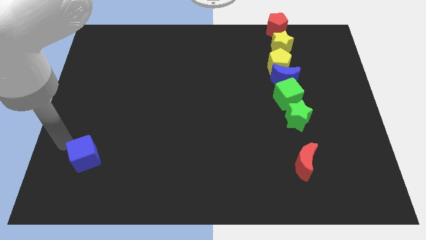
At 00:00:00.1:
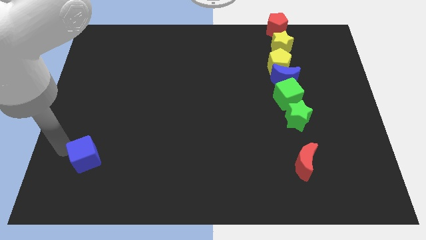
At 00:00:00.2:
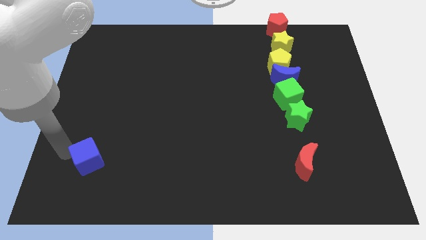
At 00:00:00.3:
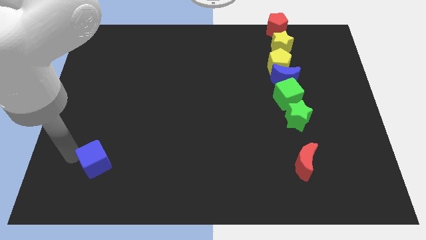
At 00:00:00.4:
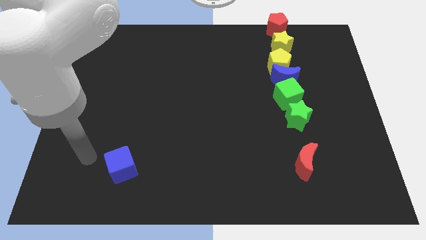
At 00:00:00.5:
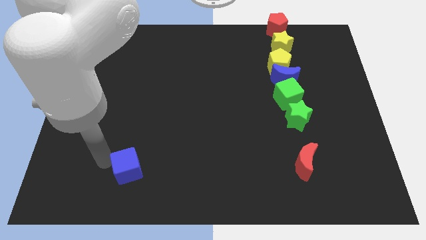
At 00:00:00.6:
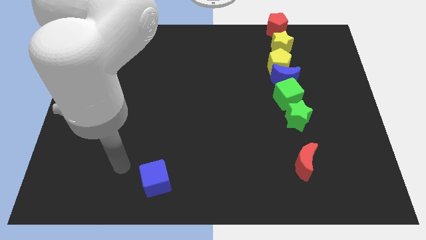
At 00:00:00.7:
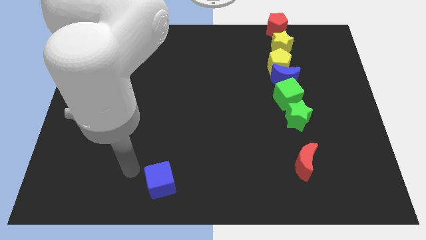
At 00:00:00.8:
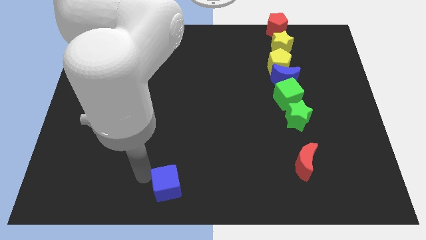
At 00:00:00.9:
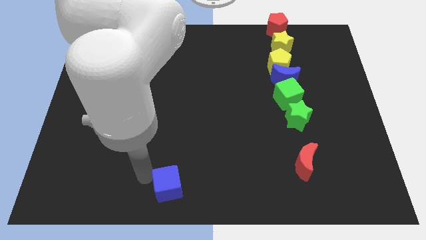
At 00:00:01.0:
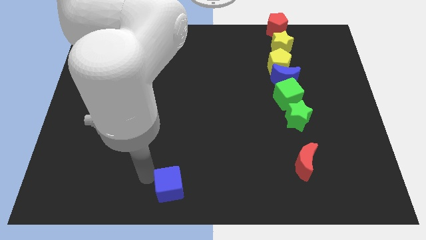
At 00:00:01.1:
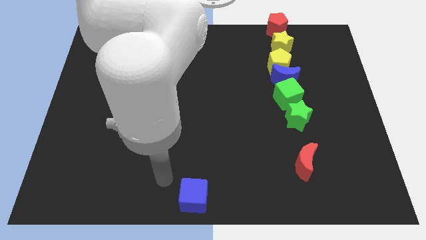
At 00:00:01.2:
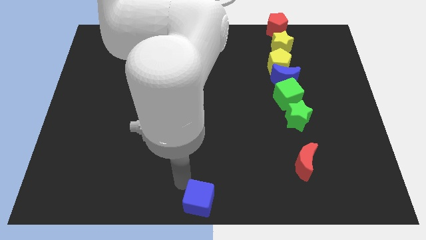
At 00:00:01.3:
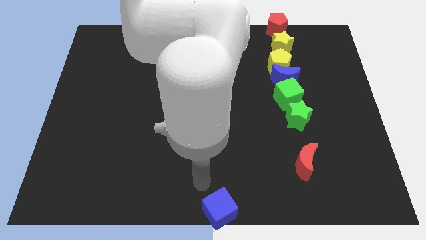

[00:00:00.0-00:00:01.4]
move the blue cube to the bottom center of the board

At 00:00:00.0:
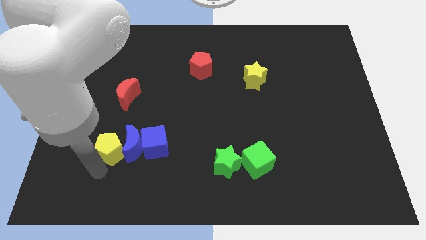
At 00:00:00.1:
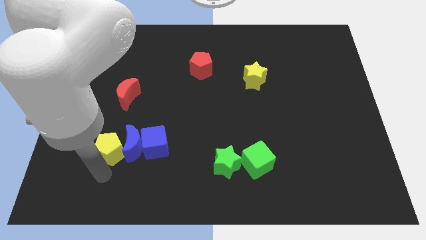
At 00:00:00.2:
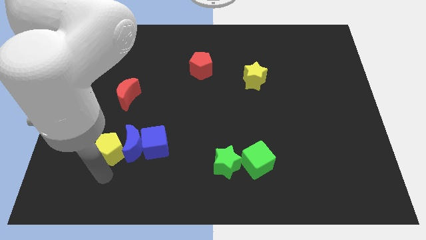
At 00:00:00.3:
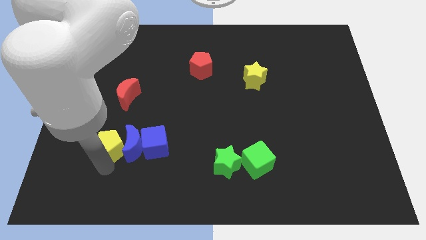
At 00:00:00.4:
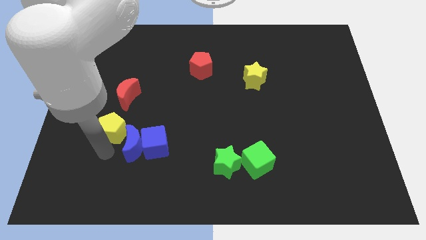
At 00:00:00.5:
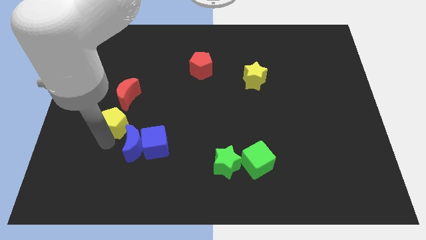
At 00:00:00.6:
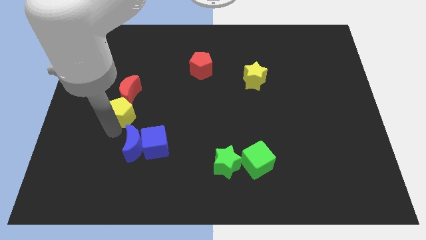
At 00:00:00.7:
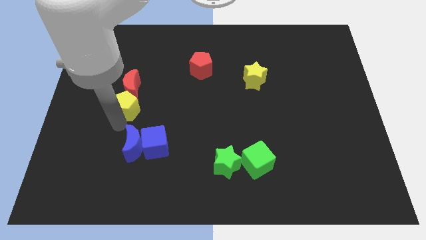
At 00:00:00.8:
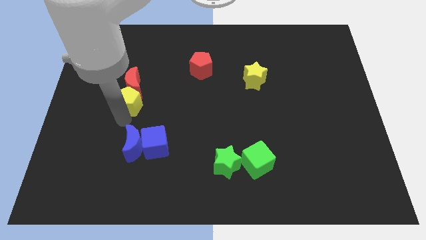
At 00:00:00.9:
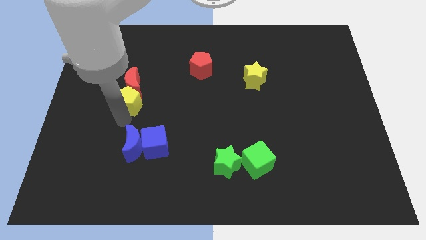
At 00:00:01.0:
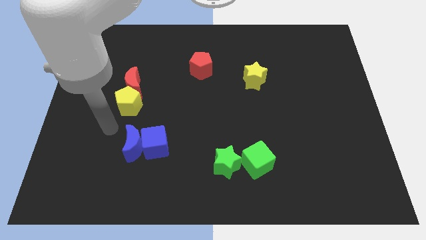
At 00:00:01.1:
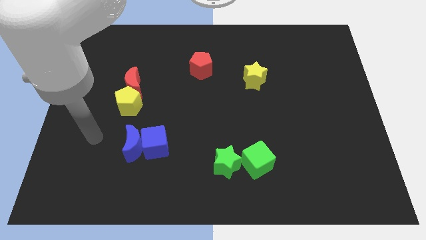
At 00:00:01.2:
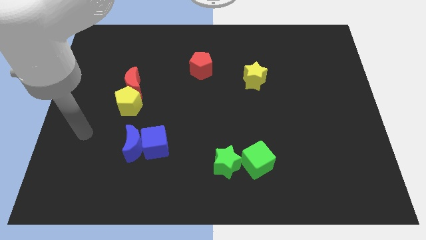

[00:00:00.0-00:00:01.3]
push the yellow pentagon to the bottom of the red crescent

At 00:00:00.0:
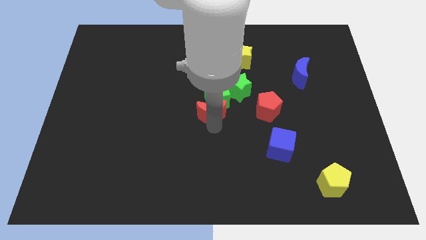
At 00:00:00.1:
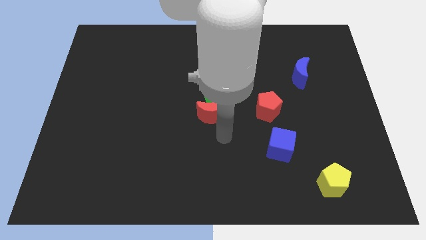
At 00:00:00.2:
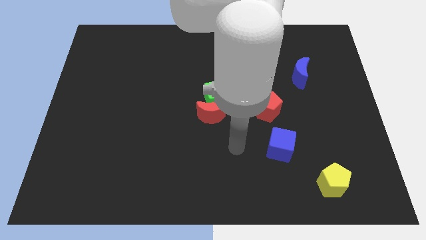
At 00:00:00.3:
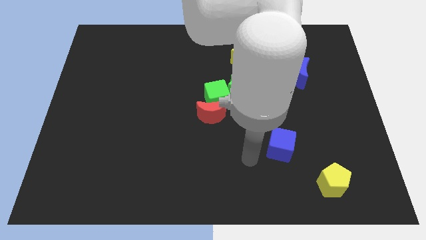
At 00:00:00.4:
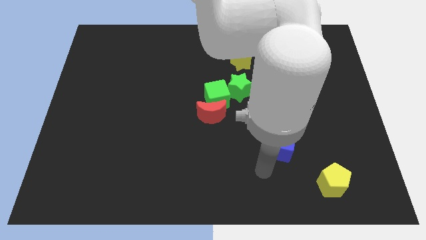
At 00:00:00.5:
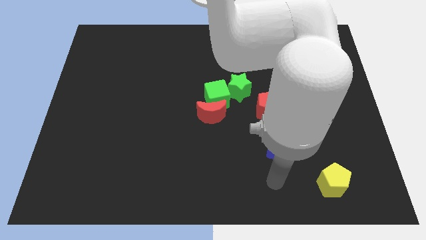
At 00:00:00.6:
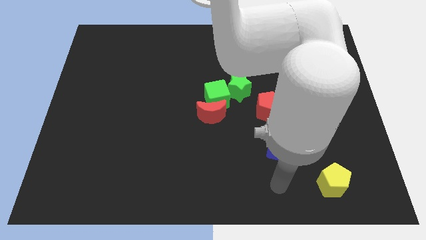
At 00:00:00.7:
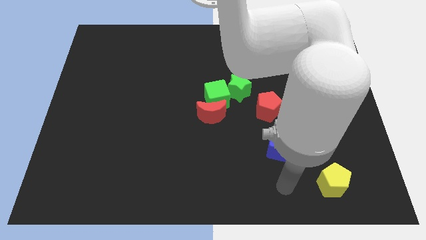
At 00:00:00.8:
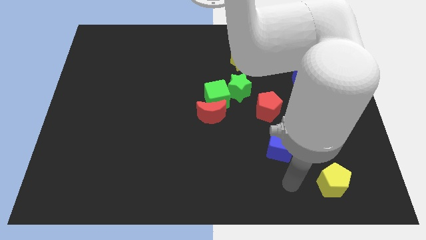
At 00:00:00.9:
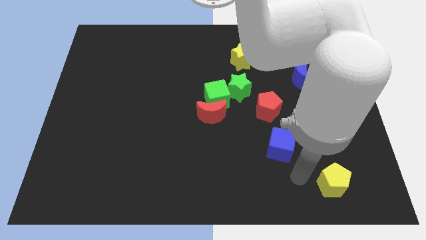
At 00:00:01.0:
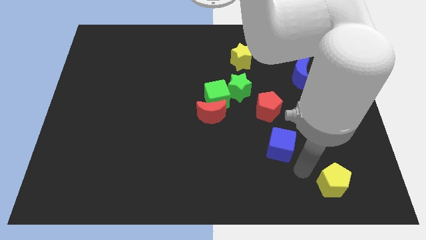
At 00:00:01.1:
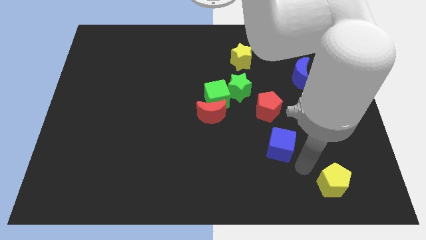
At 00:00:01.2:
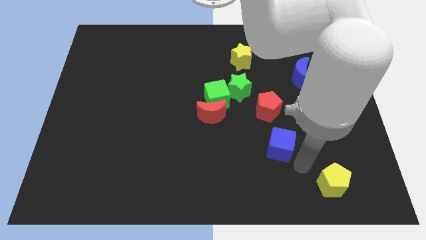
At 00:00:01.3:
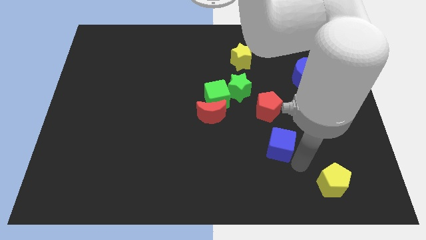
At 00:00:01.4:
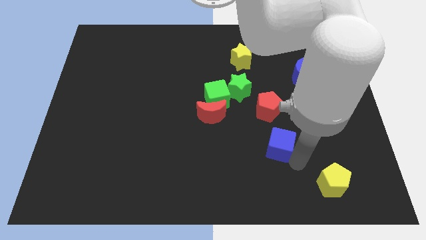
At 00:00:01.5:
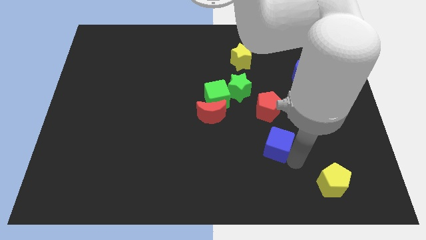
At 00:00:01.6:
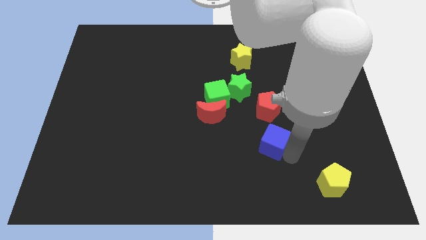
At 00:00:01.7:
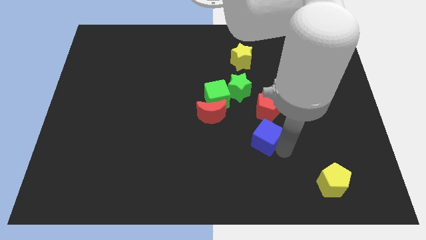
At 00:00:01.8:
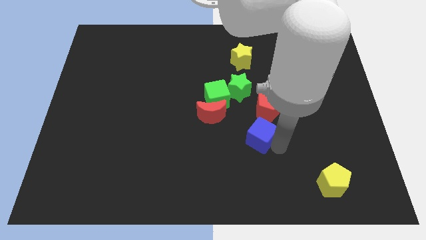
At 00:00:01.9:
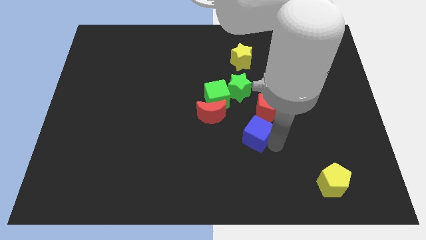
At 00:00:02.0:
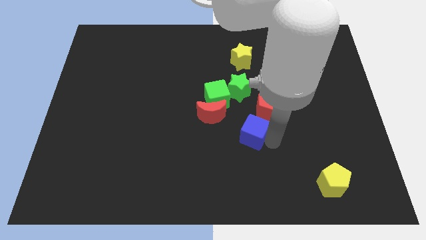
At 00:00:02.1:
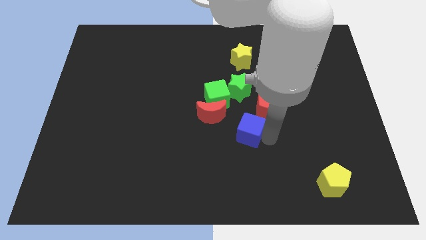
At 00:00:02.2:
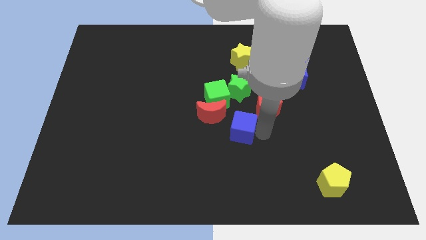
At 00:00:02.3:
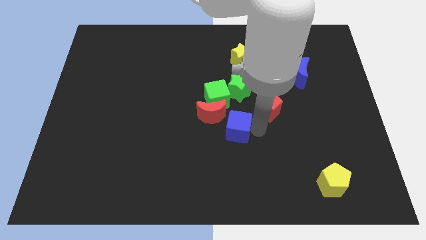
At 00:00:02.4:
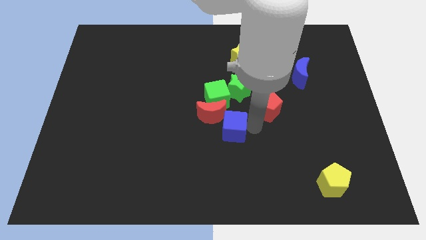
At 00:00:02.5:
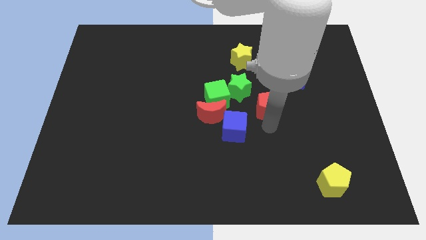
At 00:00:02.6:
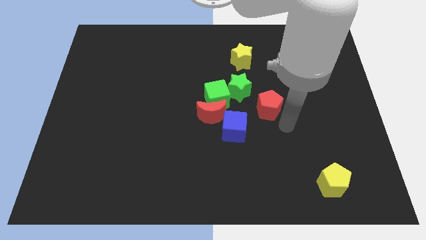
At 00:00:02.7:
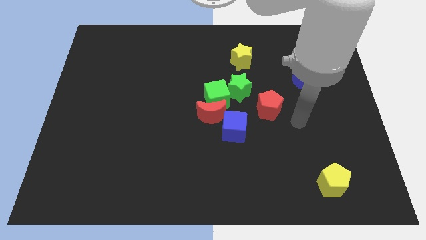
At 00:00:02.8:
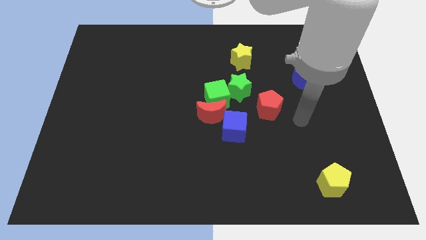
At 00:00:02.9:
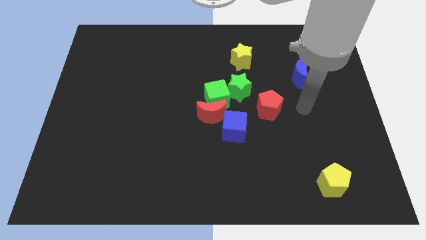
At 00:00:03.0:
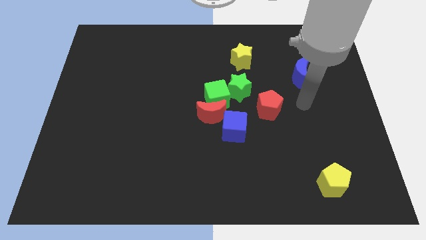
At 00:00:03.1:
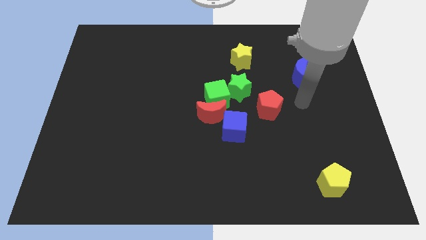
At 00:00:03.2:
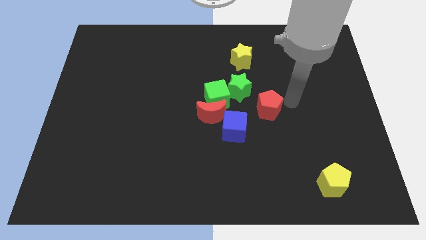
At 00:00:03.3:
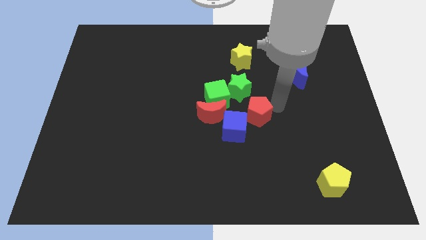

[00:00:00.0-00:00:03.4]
push the blue cube to the bottom right of the red crescent

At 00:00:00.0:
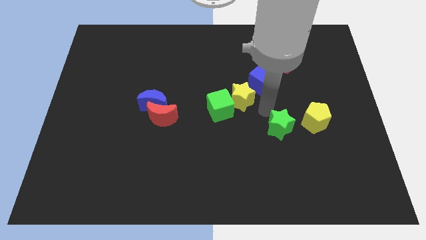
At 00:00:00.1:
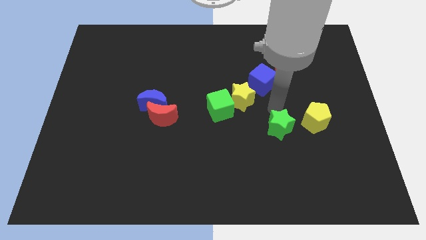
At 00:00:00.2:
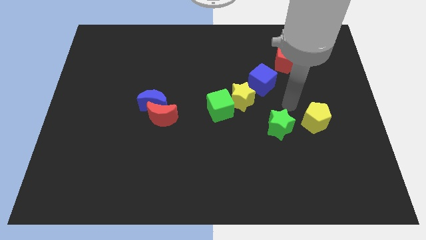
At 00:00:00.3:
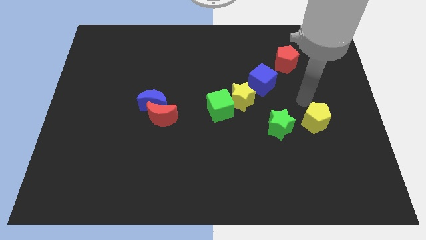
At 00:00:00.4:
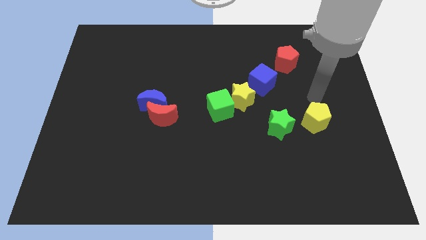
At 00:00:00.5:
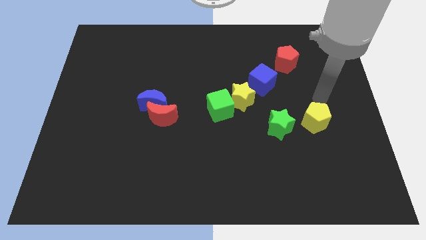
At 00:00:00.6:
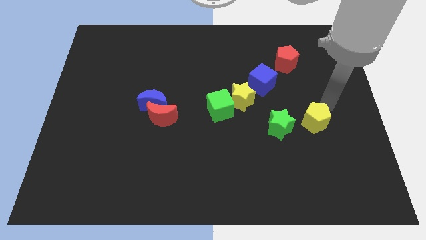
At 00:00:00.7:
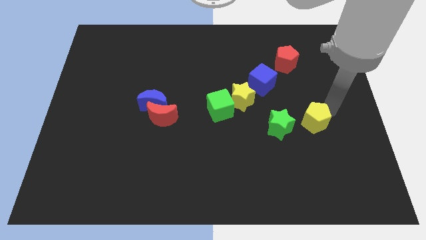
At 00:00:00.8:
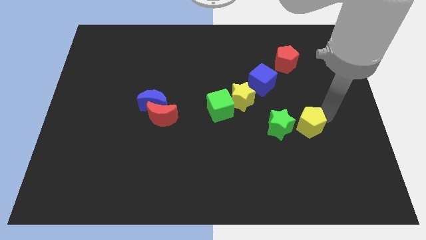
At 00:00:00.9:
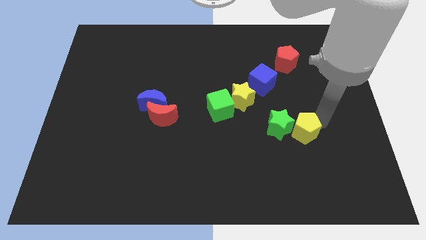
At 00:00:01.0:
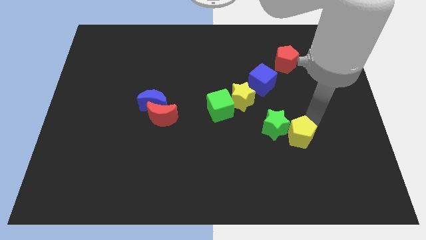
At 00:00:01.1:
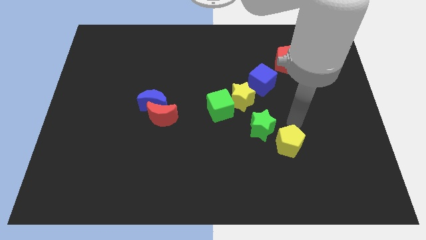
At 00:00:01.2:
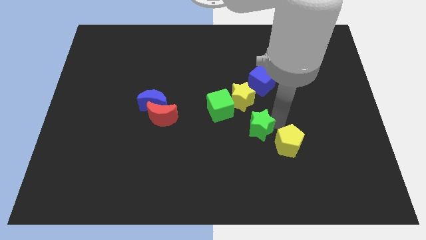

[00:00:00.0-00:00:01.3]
push the yellow pentagon to the bottom right of the green star

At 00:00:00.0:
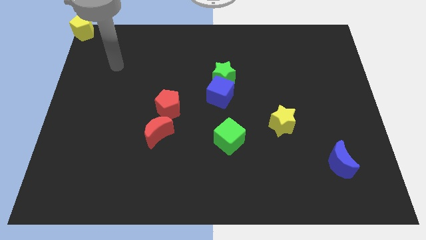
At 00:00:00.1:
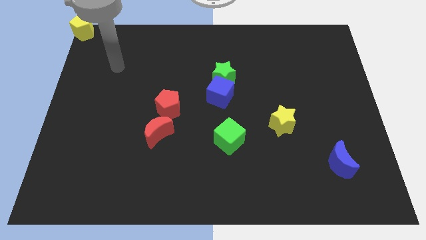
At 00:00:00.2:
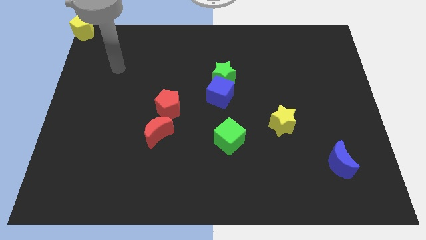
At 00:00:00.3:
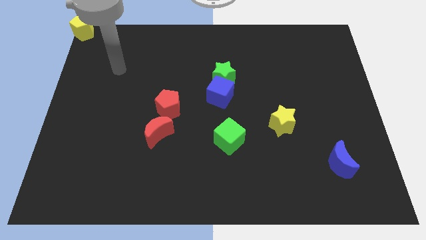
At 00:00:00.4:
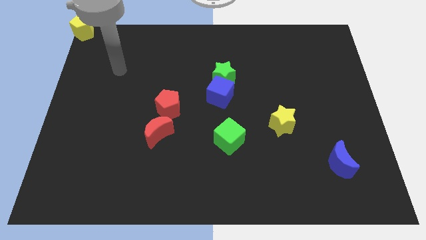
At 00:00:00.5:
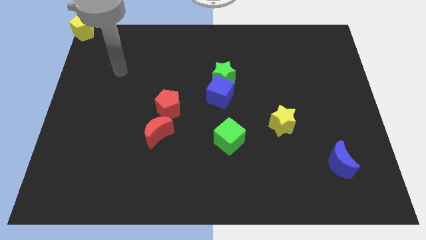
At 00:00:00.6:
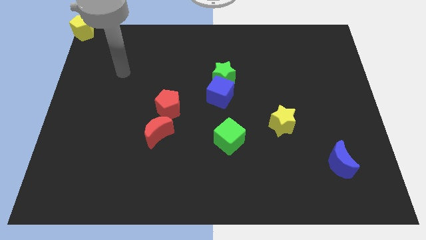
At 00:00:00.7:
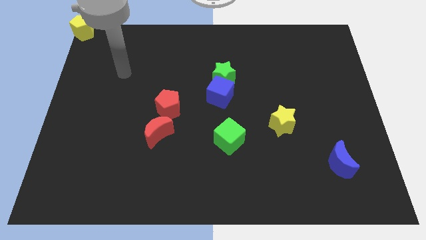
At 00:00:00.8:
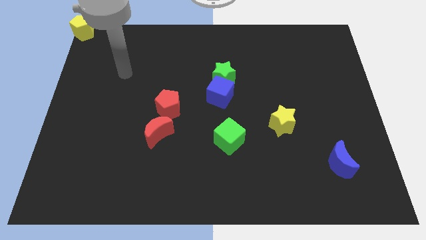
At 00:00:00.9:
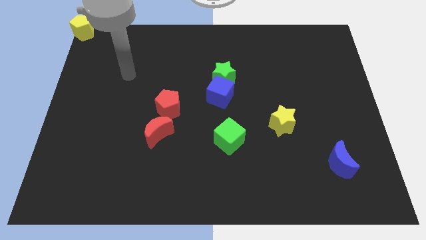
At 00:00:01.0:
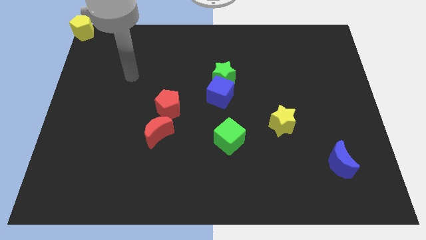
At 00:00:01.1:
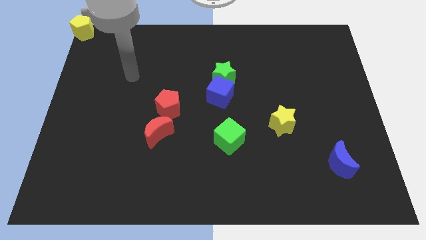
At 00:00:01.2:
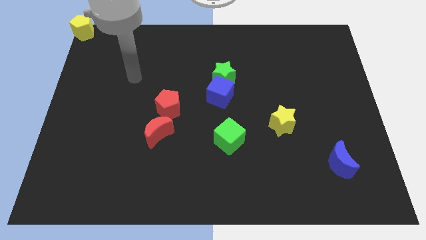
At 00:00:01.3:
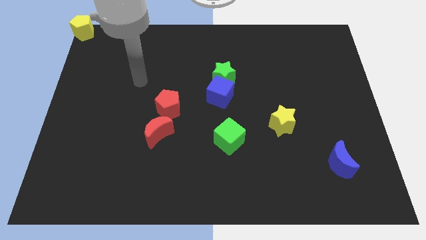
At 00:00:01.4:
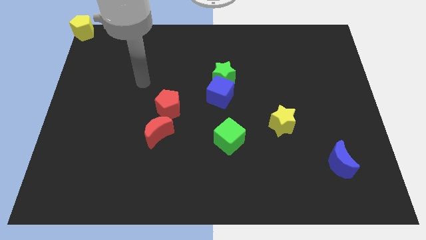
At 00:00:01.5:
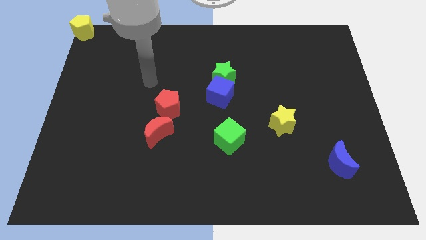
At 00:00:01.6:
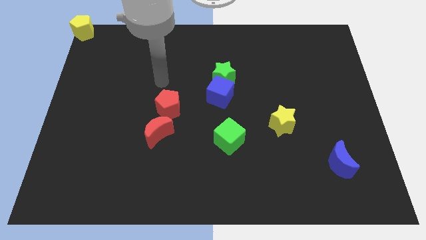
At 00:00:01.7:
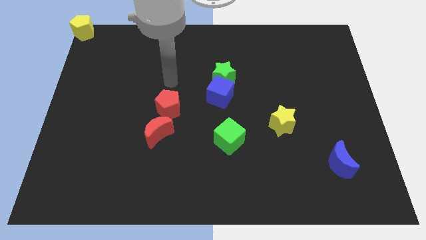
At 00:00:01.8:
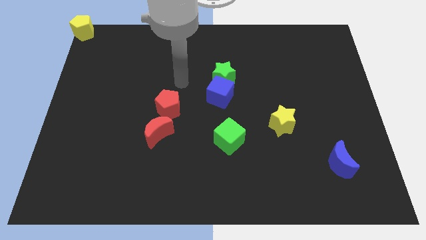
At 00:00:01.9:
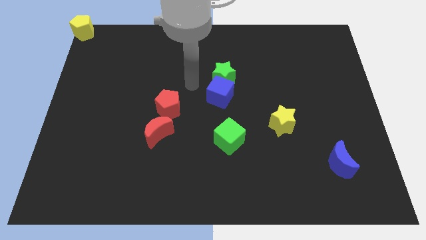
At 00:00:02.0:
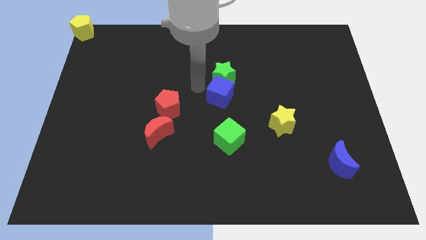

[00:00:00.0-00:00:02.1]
point the arm to the left of the blue cube
